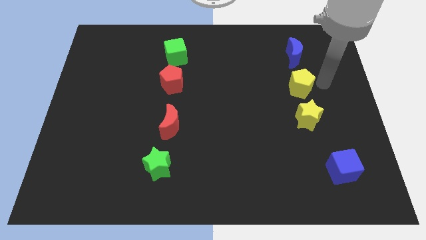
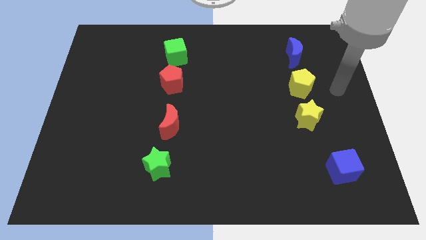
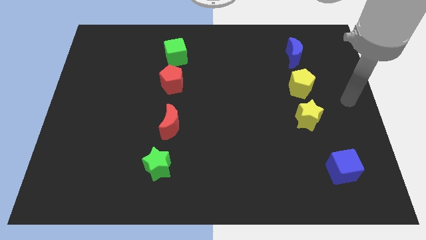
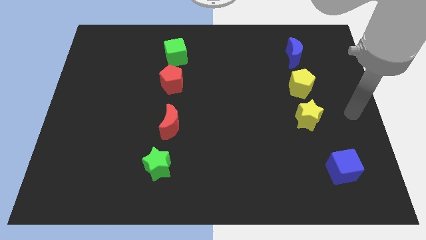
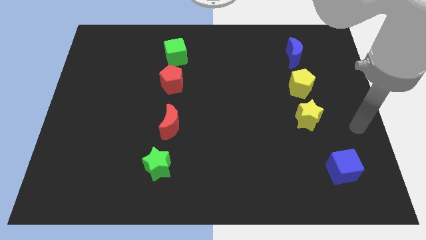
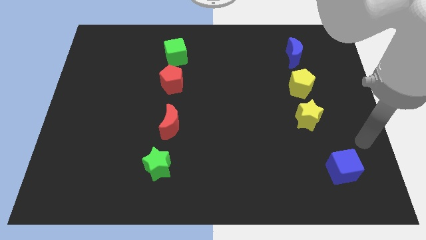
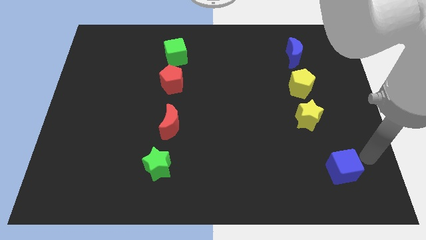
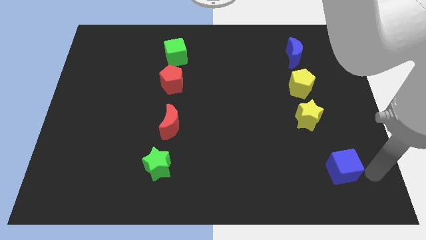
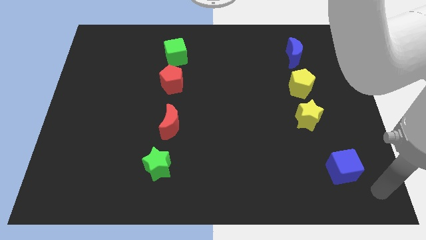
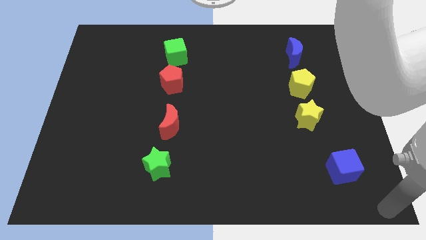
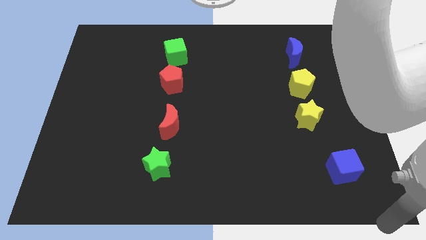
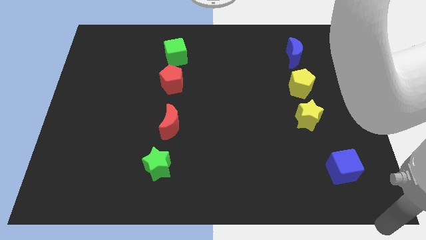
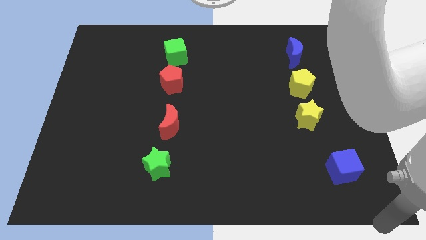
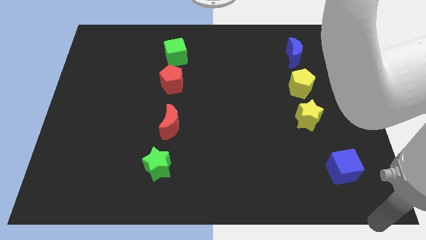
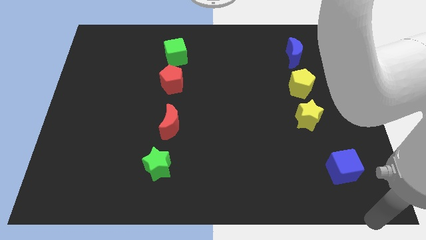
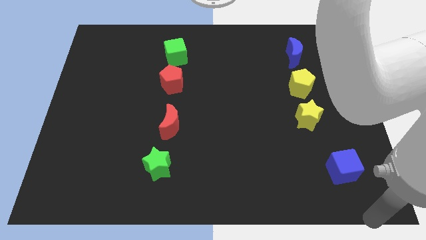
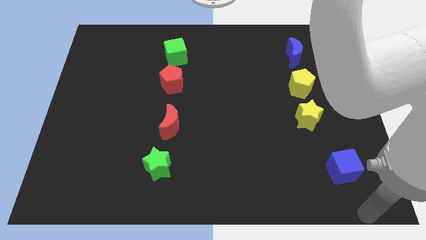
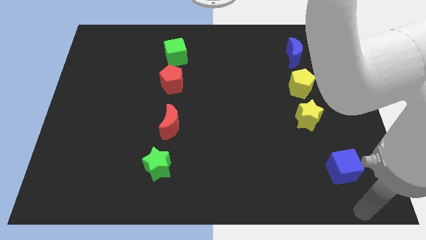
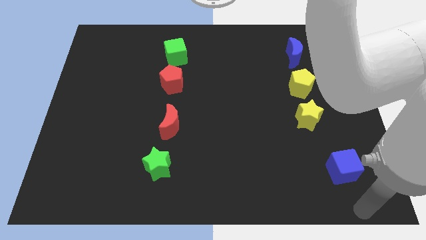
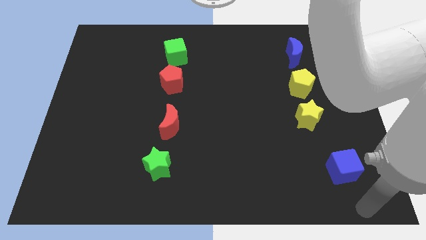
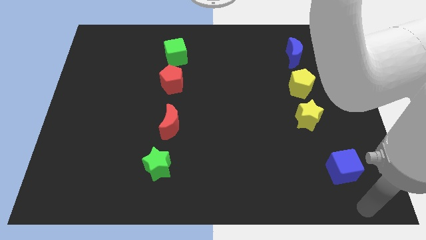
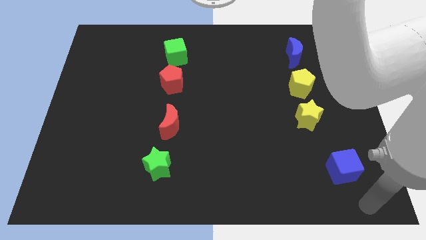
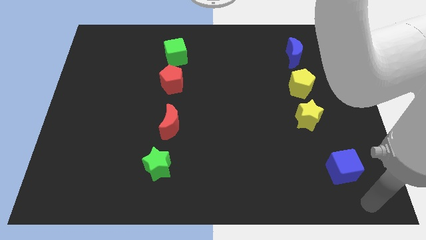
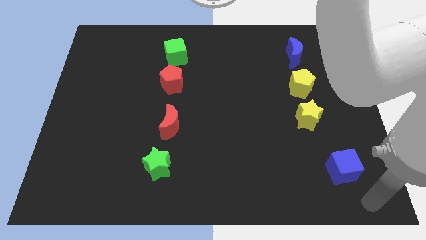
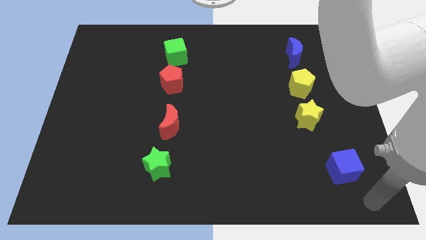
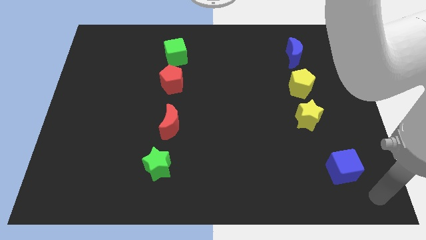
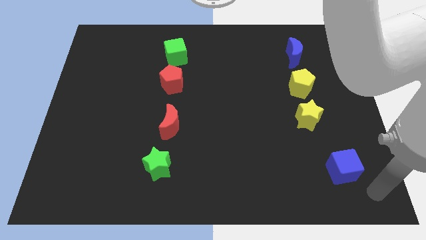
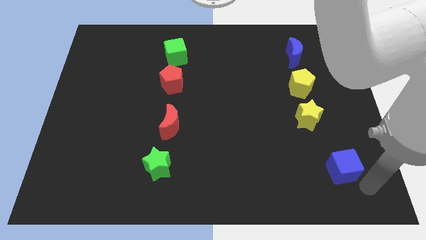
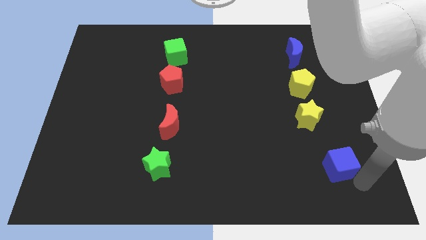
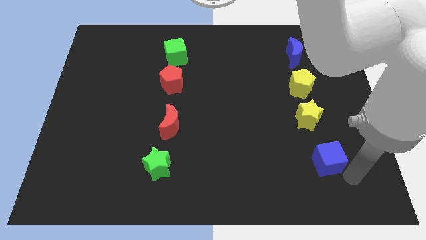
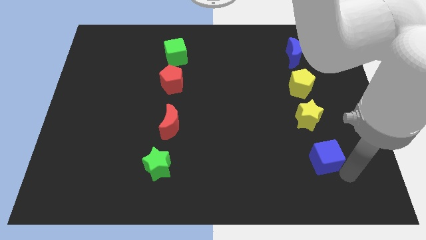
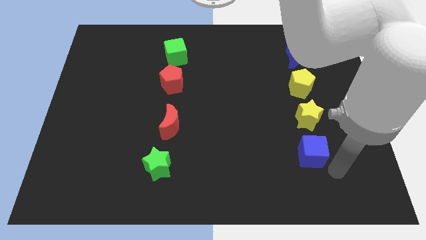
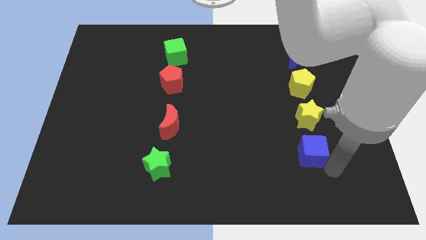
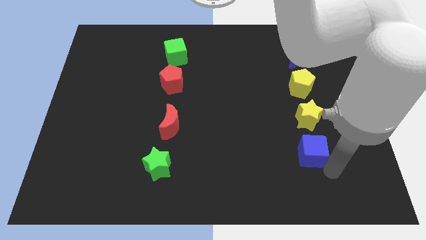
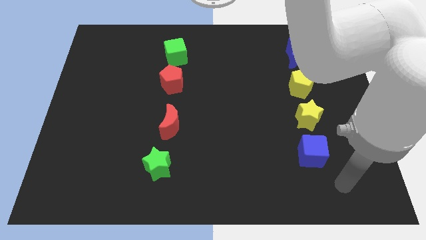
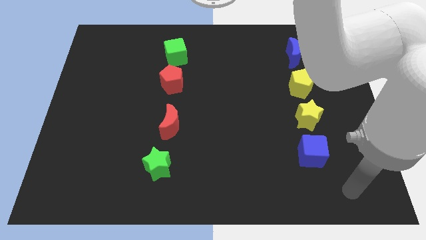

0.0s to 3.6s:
push the blue cube to the bottom side of the yellow star

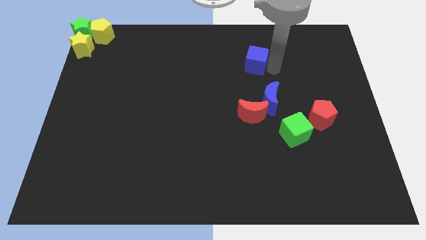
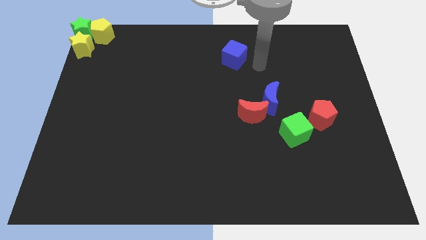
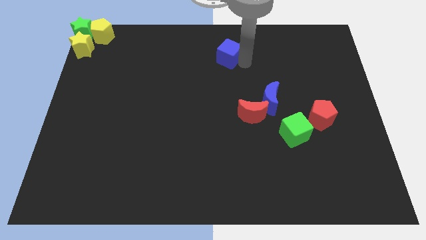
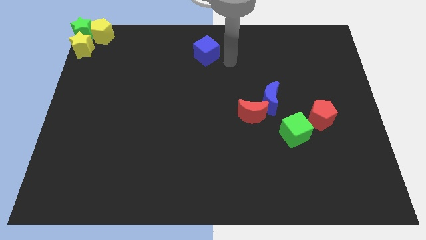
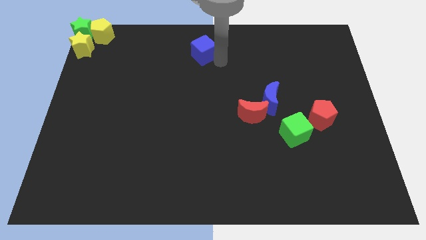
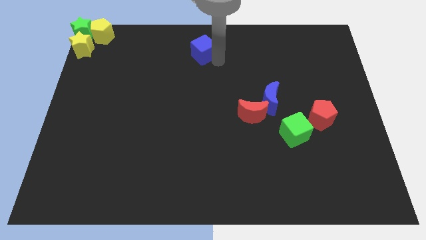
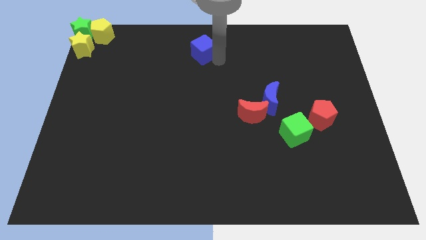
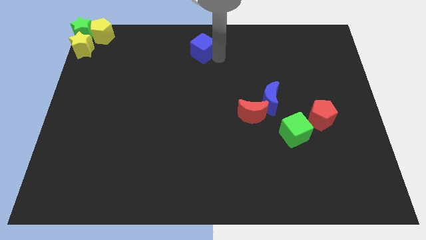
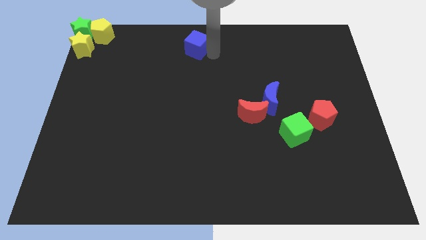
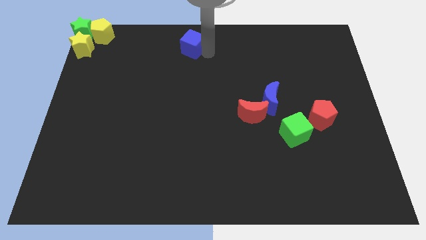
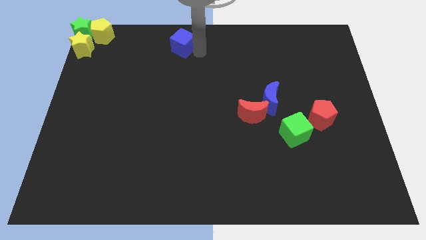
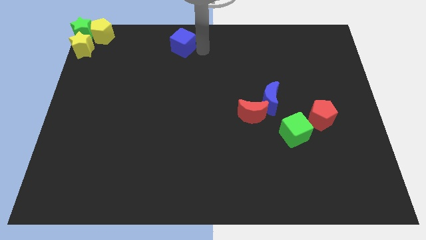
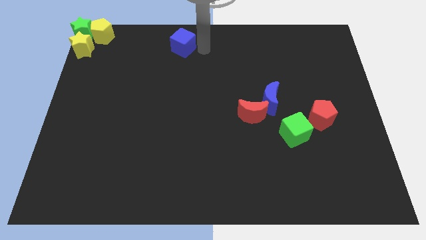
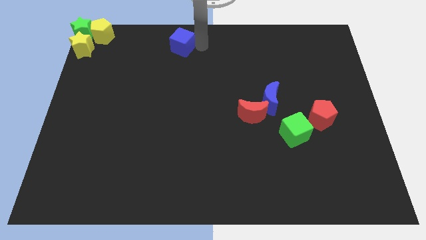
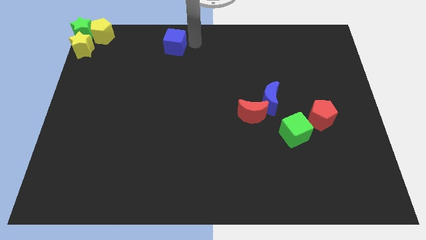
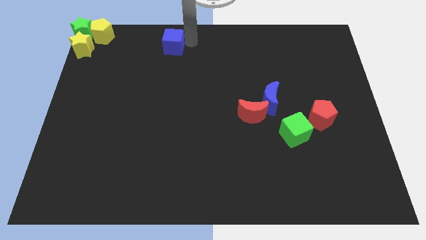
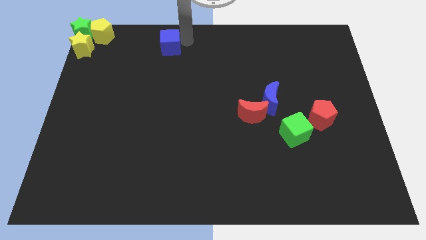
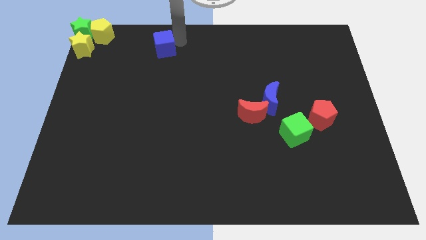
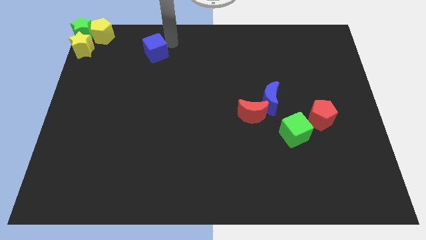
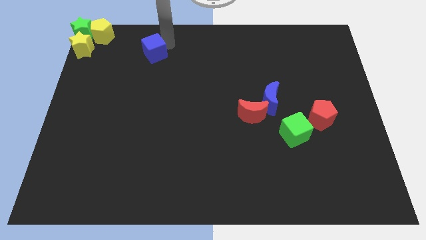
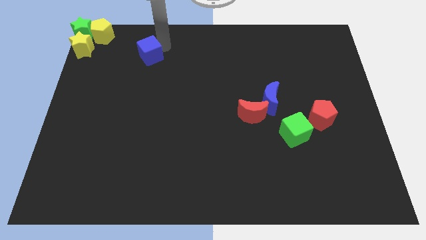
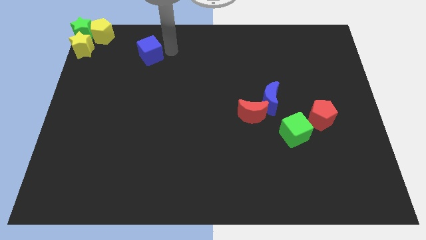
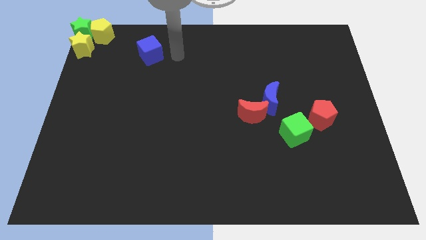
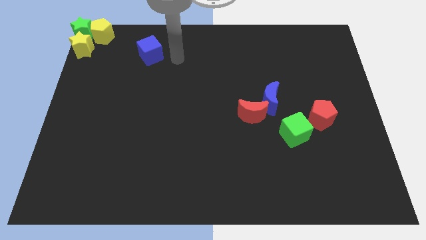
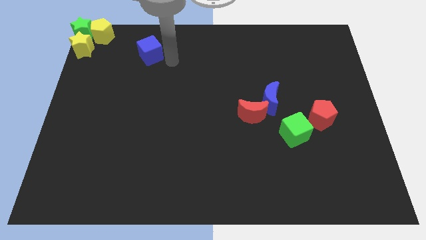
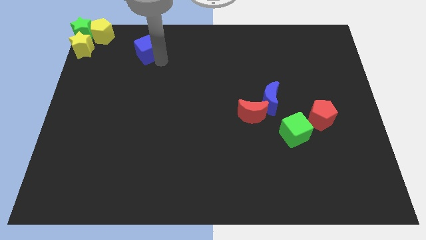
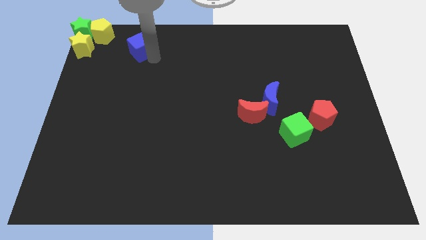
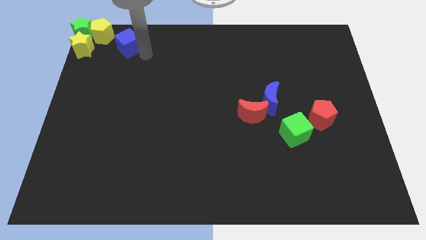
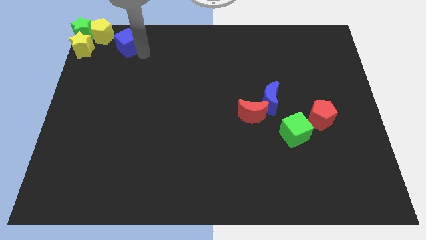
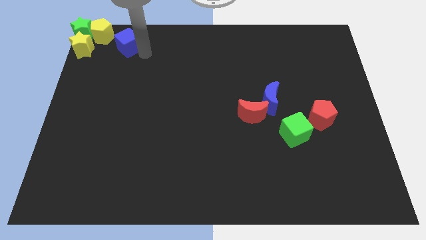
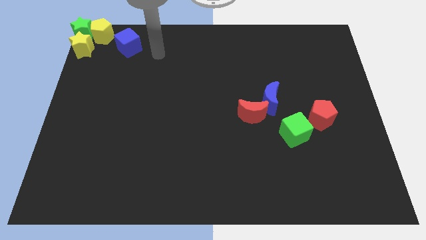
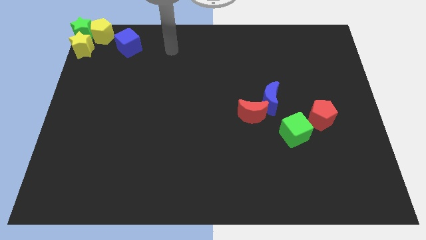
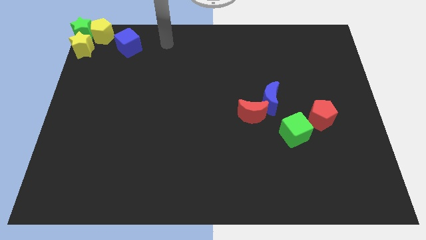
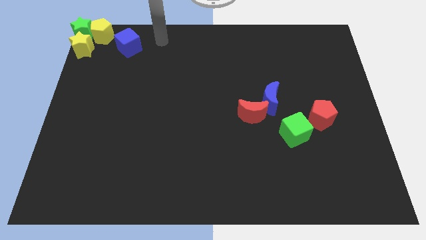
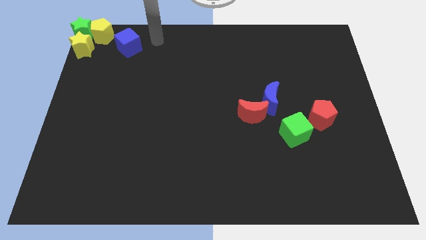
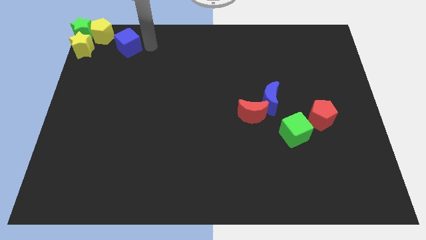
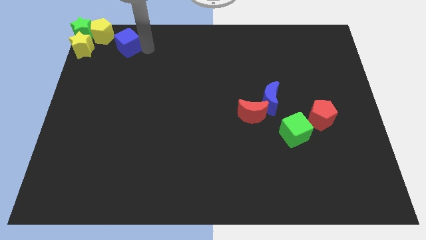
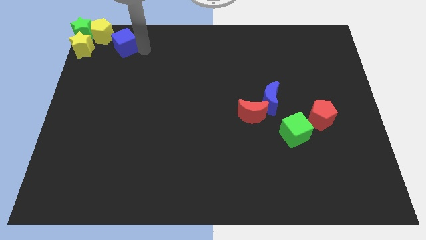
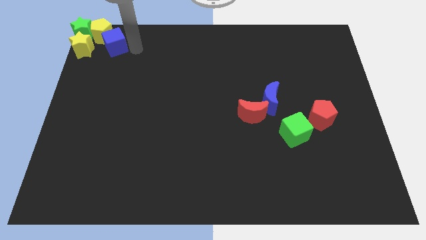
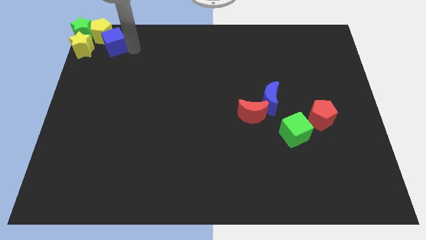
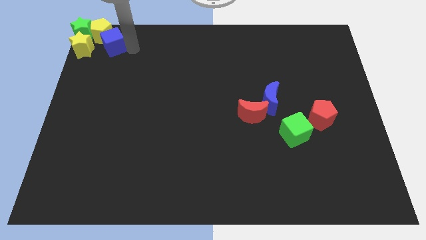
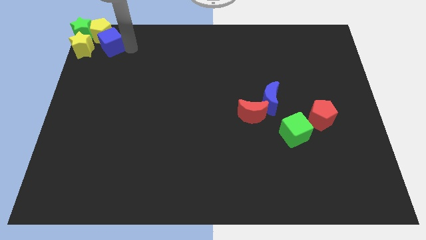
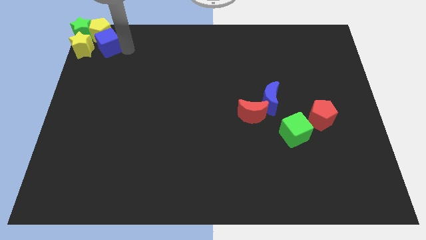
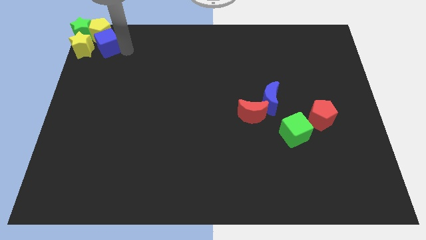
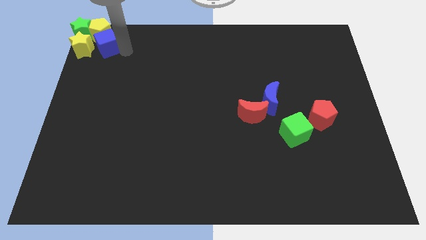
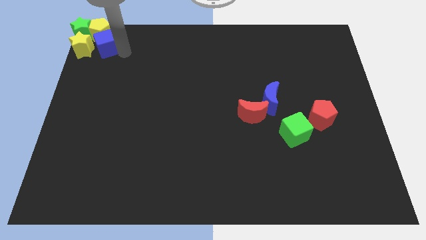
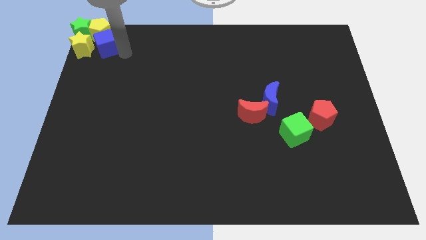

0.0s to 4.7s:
slide the blue cube into the group of blocks

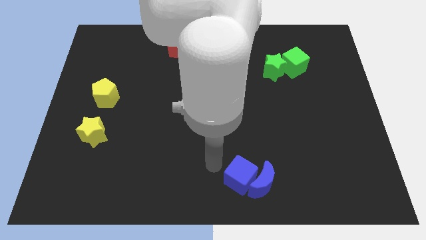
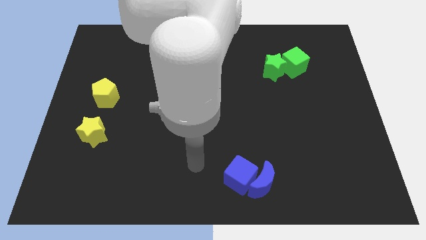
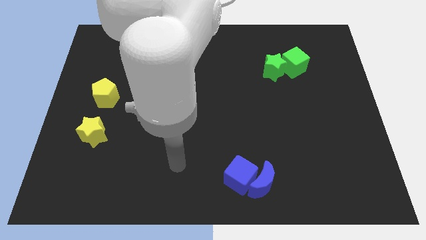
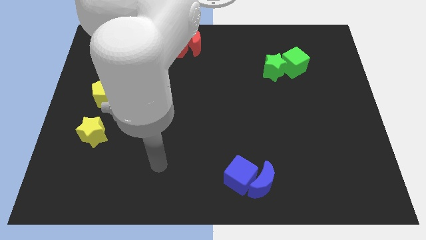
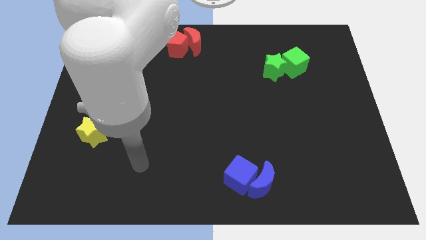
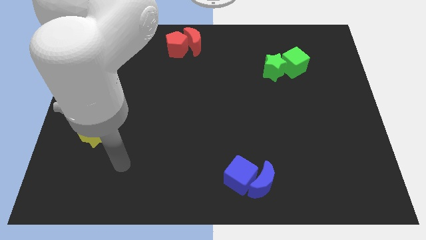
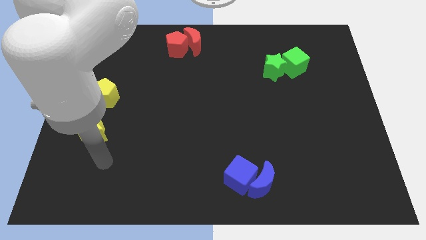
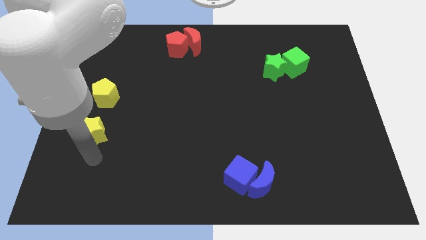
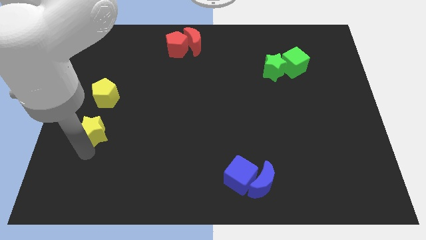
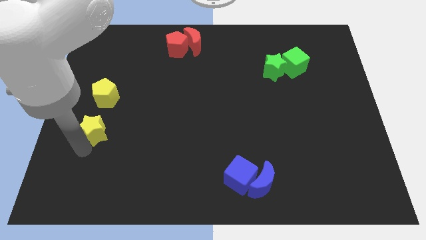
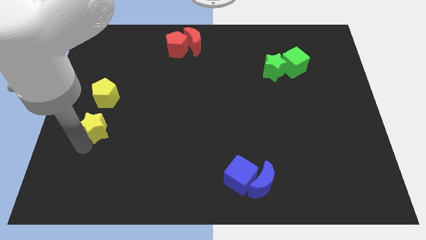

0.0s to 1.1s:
point your arm below yellow star
